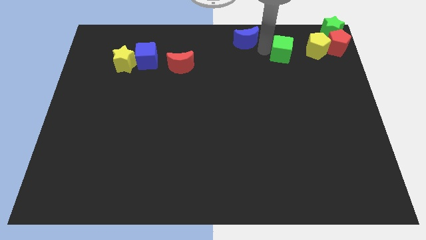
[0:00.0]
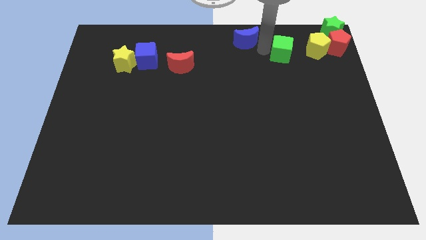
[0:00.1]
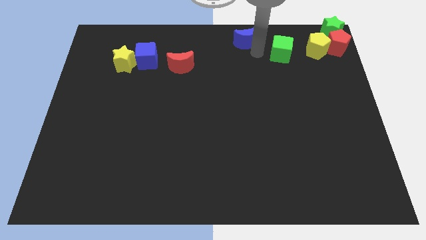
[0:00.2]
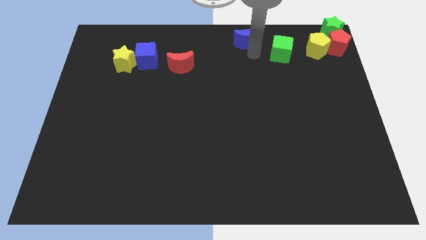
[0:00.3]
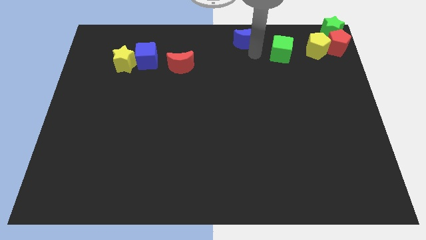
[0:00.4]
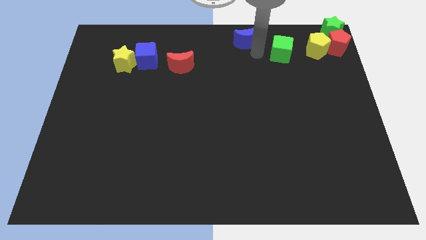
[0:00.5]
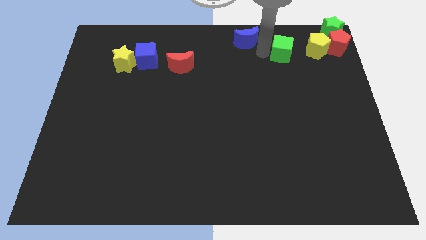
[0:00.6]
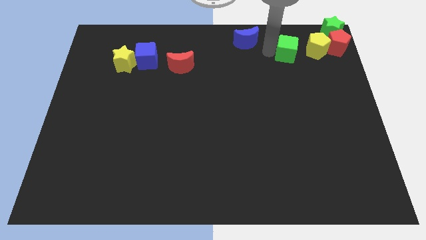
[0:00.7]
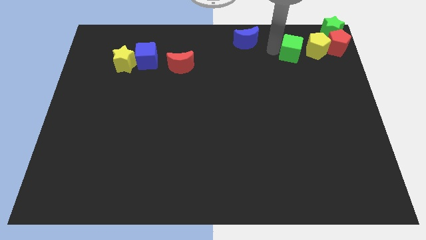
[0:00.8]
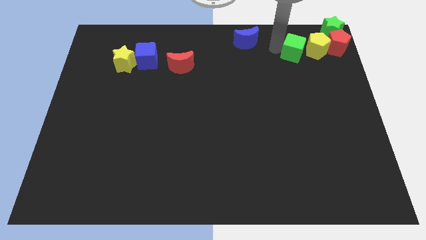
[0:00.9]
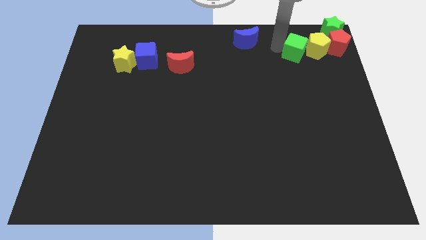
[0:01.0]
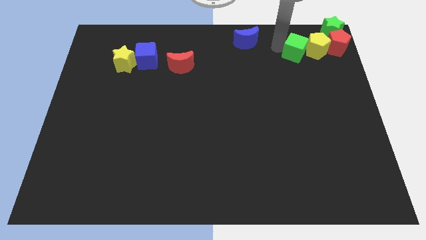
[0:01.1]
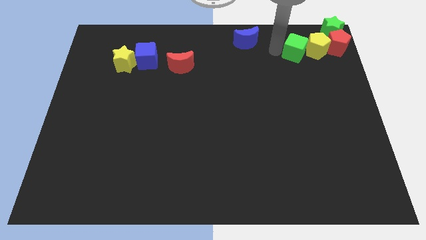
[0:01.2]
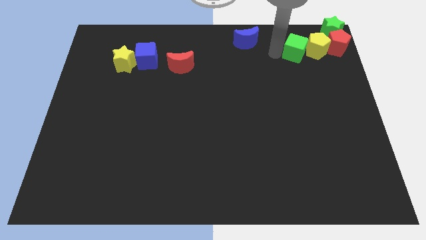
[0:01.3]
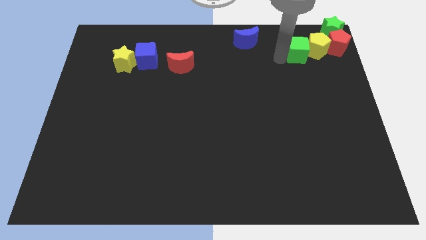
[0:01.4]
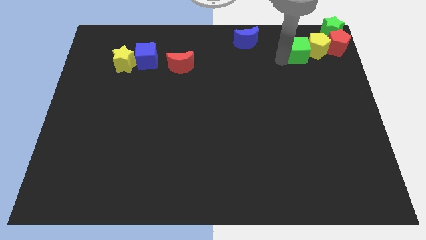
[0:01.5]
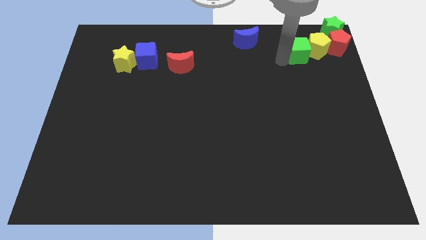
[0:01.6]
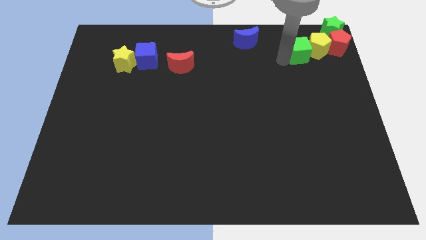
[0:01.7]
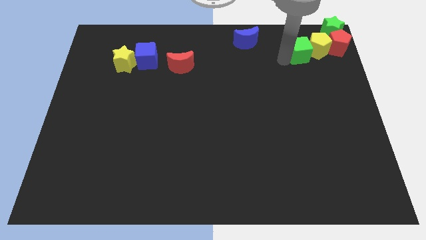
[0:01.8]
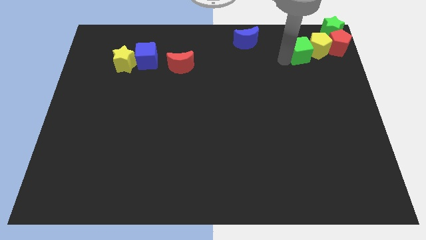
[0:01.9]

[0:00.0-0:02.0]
push the green cube into the yellow pentagon

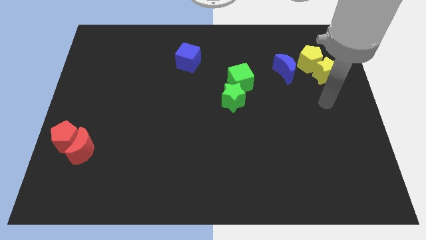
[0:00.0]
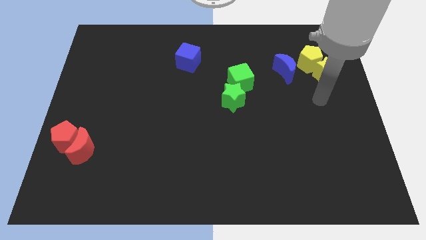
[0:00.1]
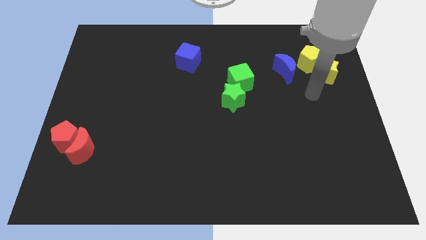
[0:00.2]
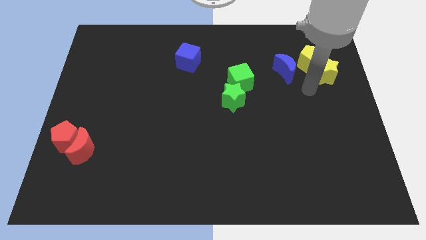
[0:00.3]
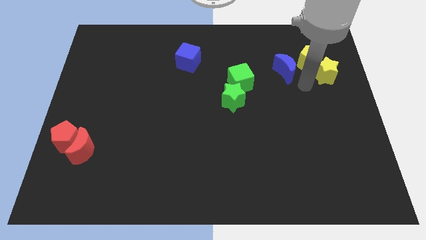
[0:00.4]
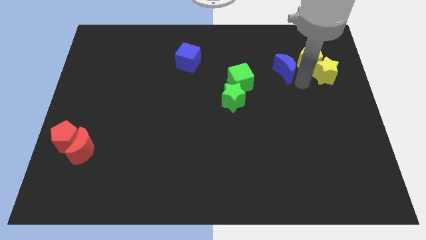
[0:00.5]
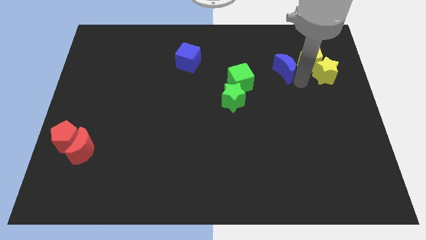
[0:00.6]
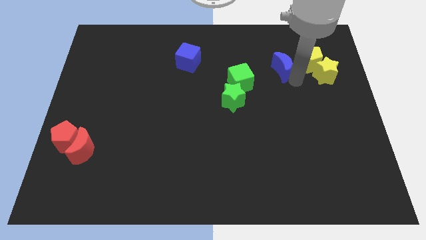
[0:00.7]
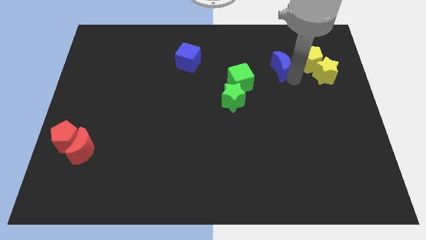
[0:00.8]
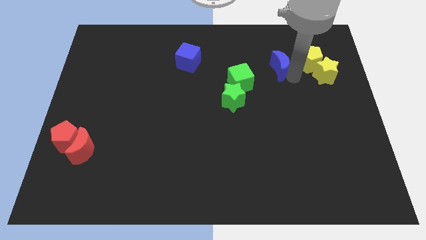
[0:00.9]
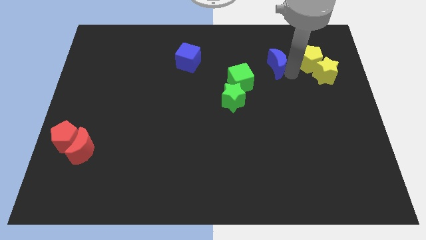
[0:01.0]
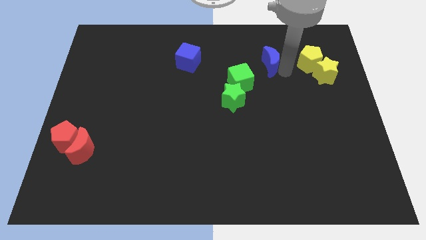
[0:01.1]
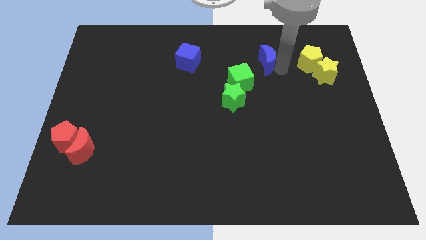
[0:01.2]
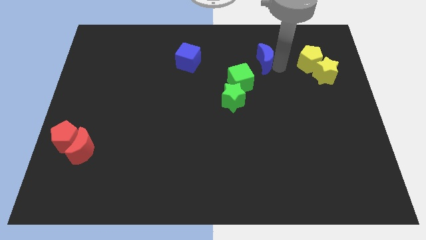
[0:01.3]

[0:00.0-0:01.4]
push the blue crescent slightly towards the top side

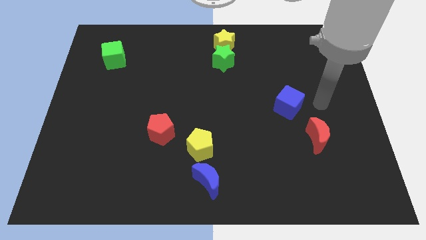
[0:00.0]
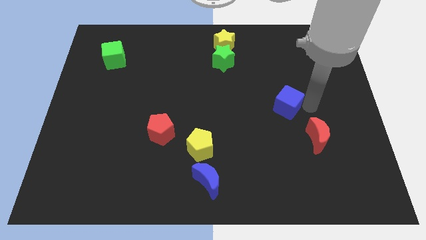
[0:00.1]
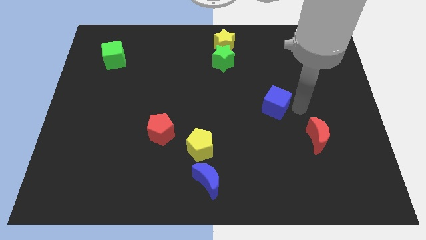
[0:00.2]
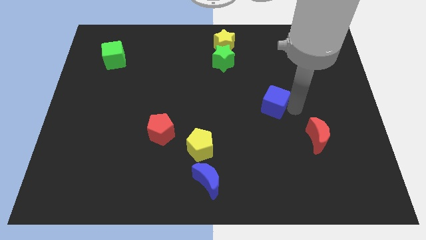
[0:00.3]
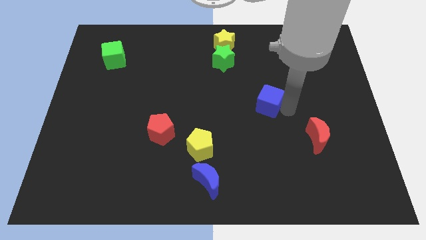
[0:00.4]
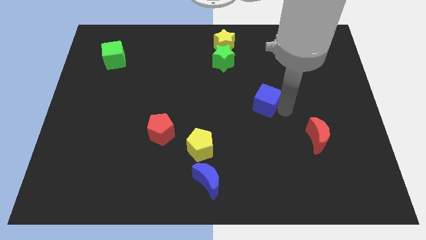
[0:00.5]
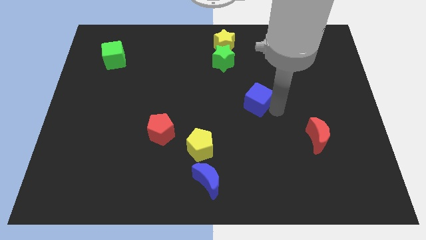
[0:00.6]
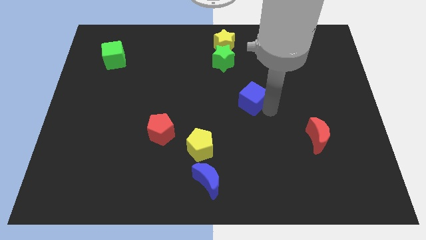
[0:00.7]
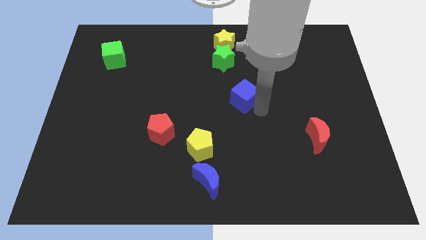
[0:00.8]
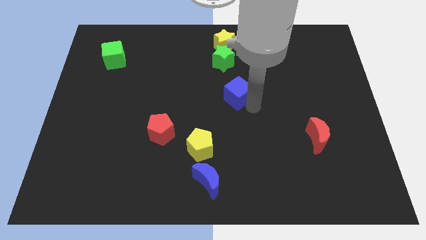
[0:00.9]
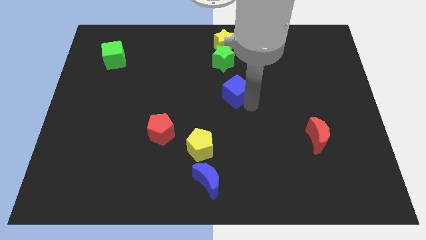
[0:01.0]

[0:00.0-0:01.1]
move the blue cube towards the green star

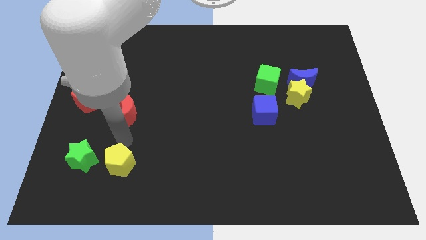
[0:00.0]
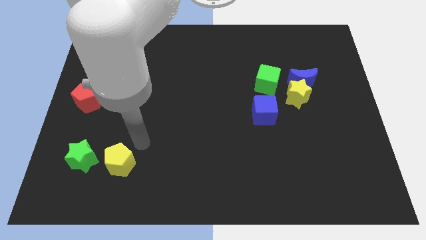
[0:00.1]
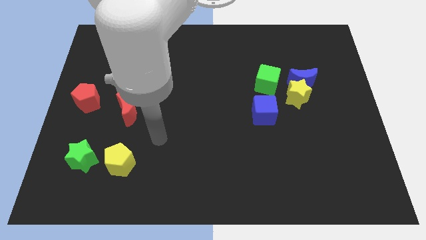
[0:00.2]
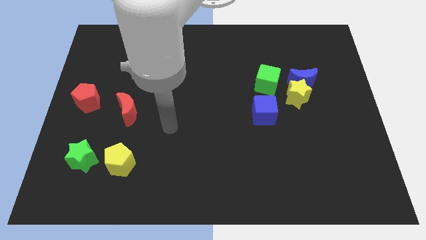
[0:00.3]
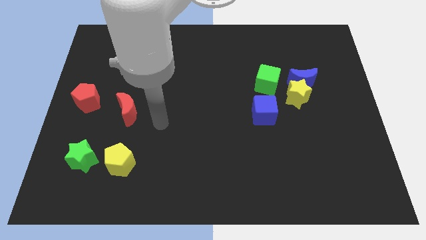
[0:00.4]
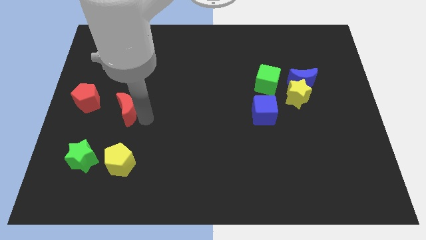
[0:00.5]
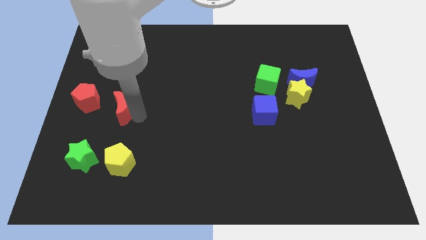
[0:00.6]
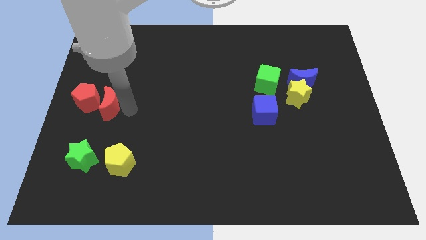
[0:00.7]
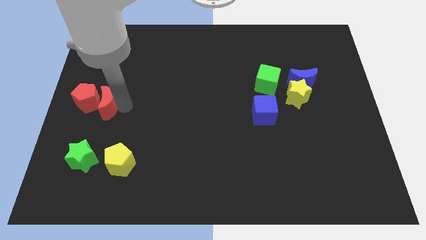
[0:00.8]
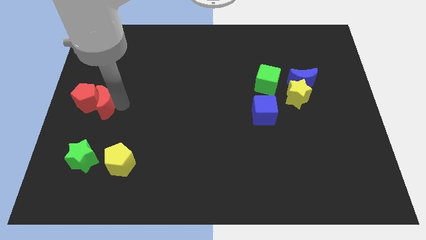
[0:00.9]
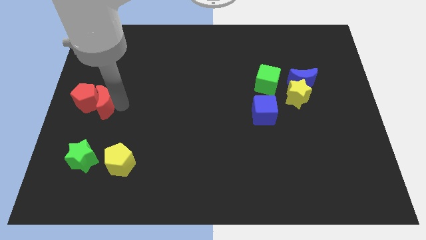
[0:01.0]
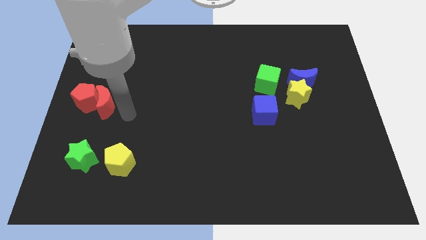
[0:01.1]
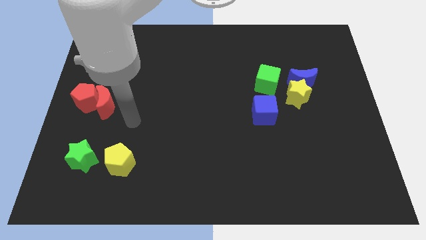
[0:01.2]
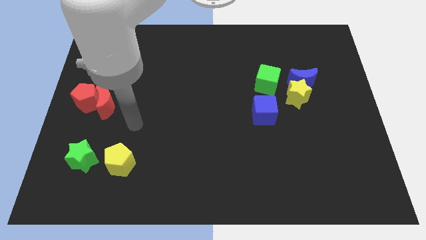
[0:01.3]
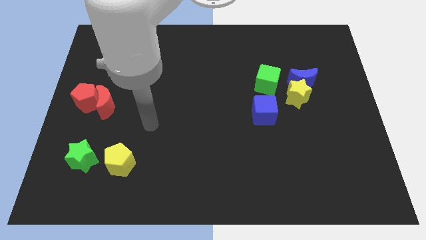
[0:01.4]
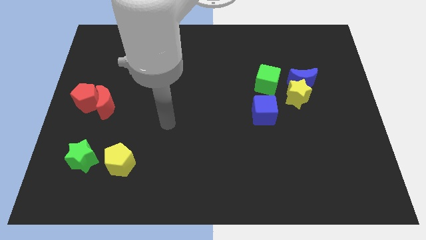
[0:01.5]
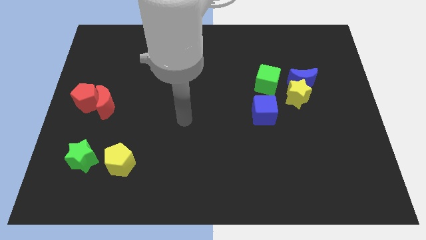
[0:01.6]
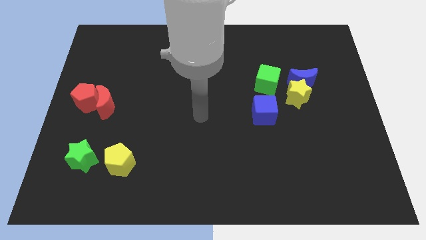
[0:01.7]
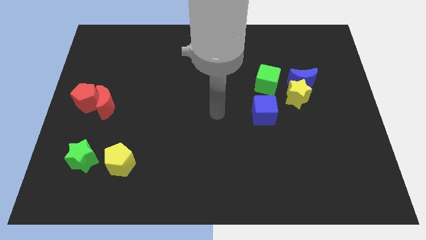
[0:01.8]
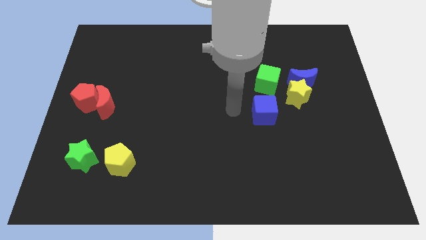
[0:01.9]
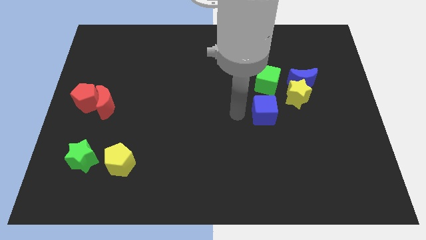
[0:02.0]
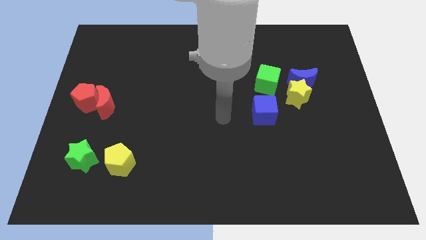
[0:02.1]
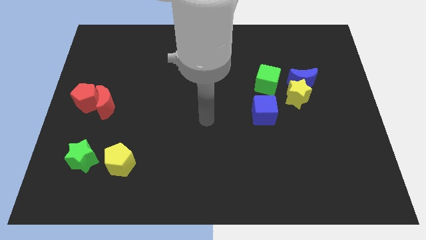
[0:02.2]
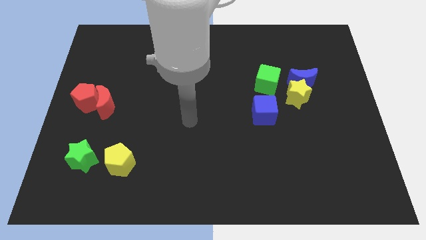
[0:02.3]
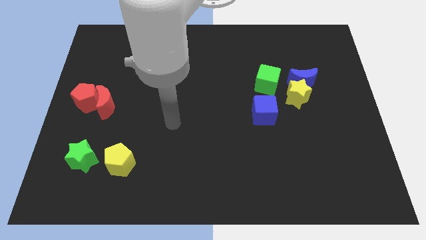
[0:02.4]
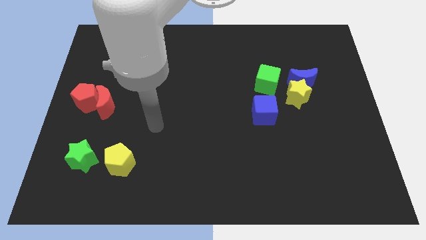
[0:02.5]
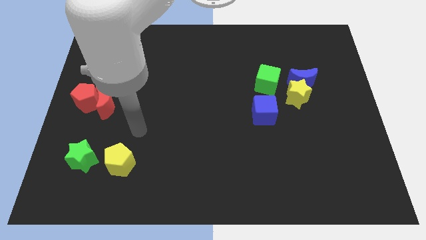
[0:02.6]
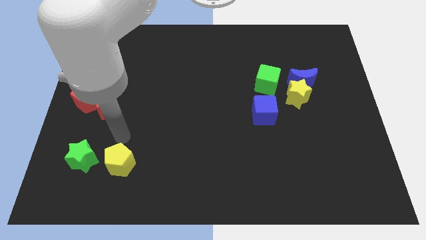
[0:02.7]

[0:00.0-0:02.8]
push red moon into red pentagon

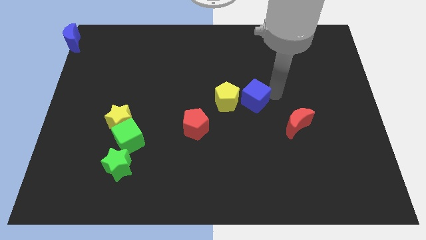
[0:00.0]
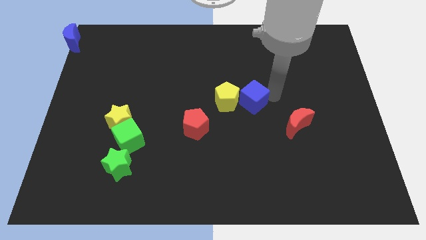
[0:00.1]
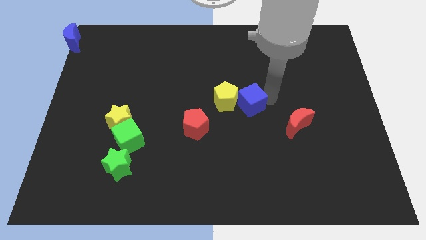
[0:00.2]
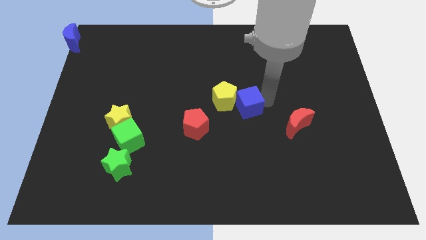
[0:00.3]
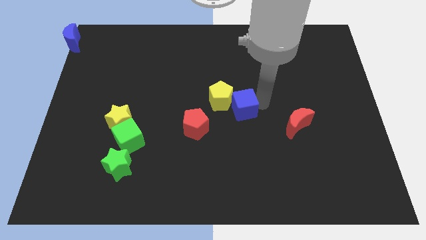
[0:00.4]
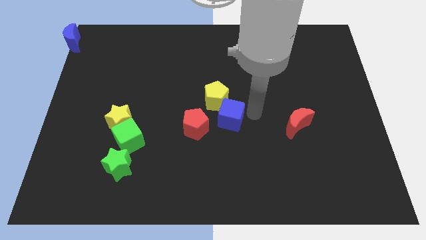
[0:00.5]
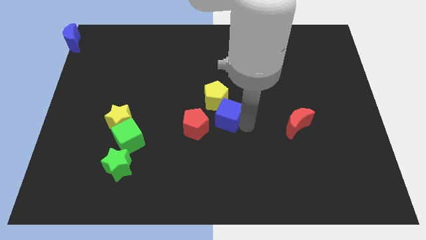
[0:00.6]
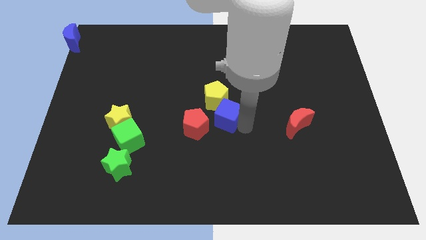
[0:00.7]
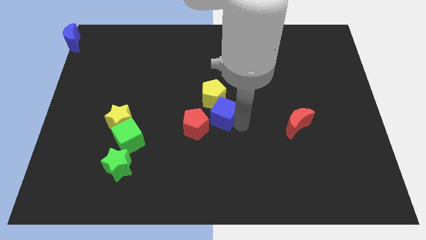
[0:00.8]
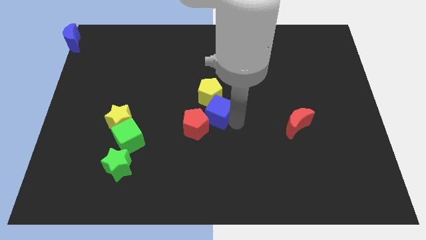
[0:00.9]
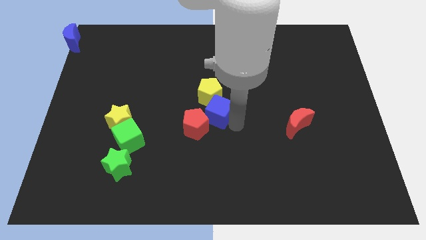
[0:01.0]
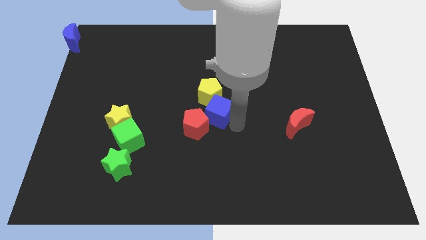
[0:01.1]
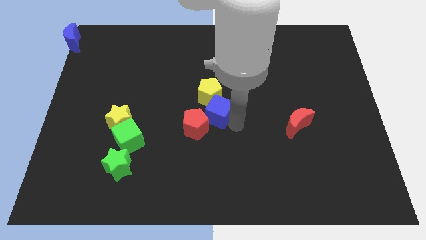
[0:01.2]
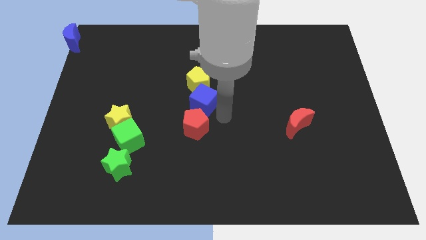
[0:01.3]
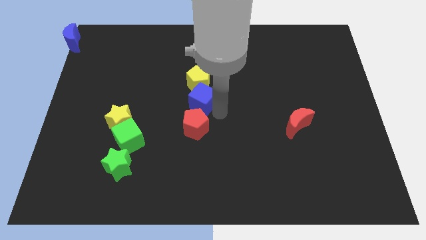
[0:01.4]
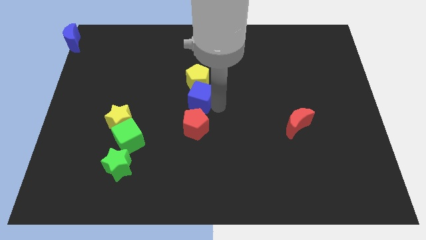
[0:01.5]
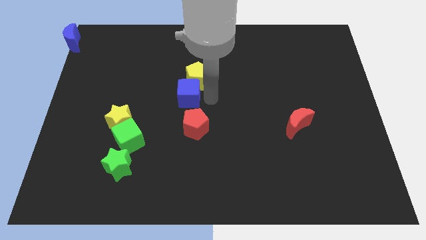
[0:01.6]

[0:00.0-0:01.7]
put the blue cube below the yellow pentagon
